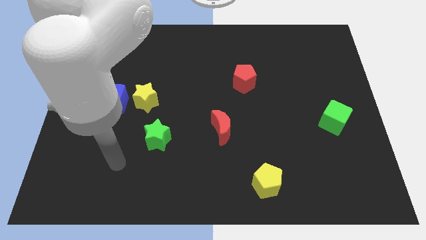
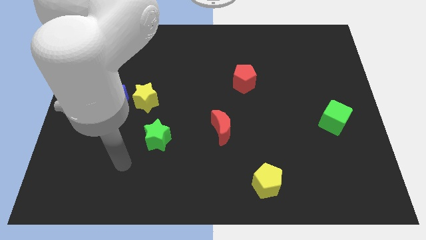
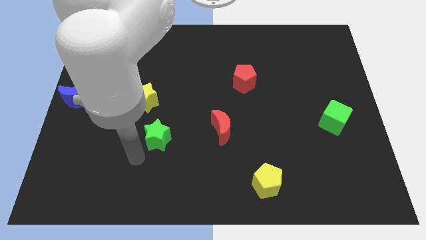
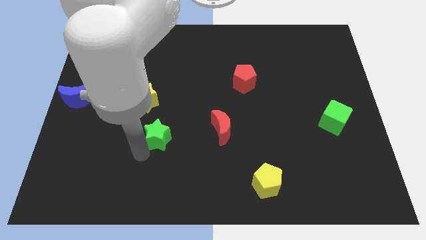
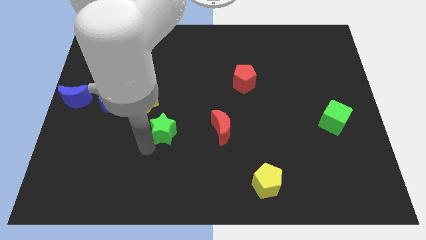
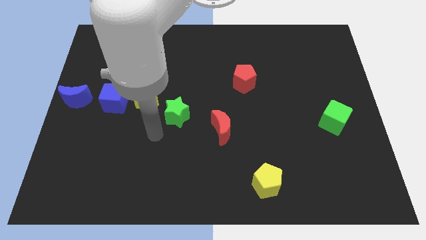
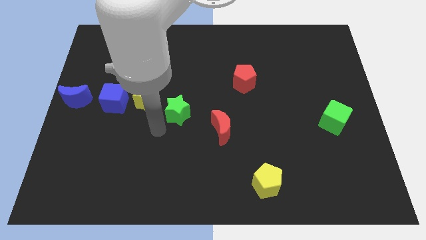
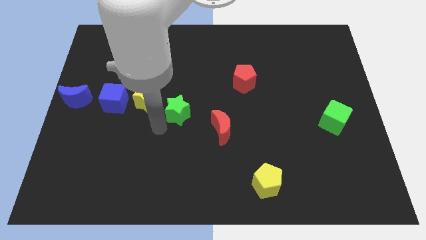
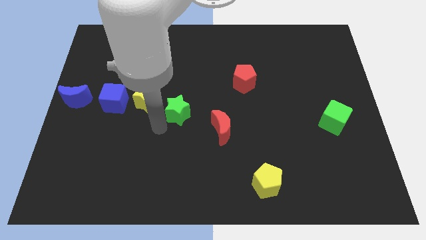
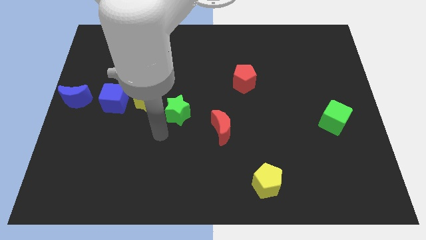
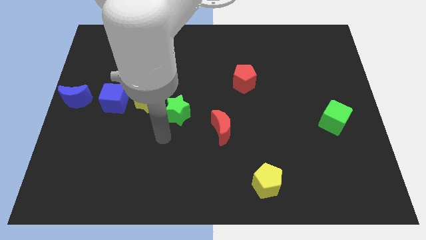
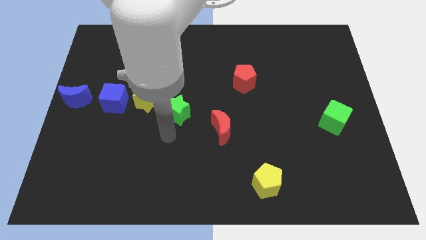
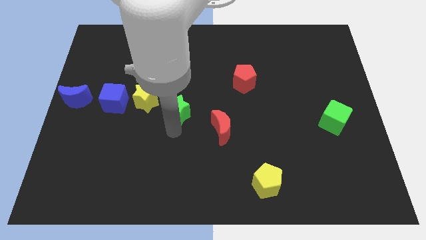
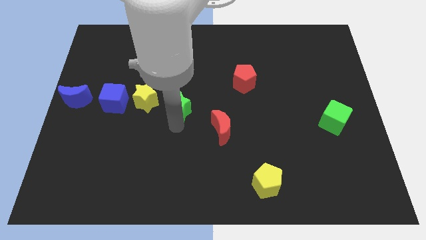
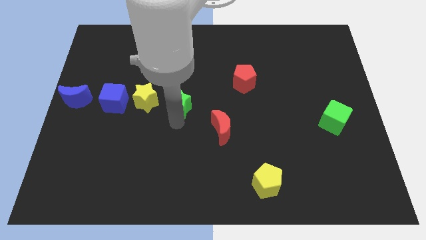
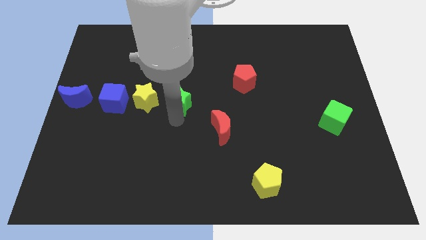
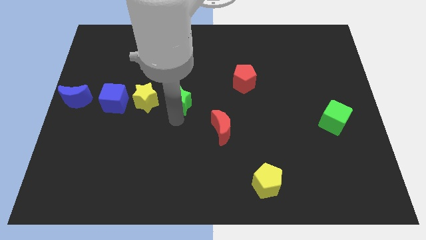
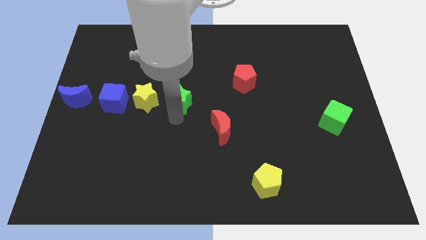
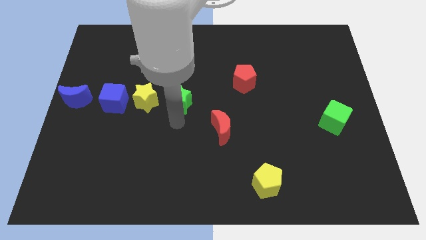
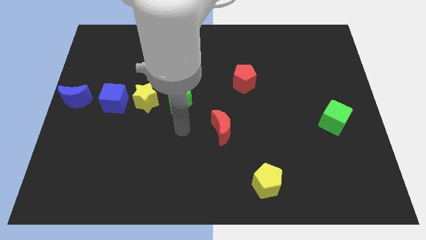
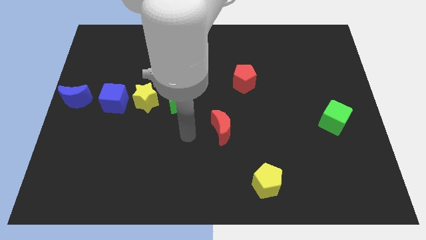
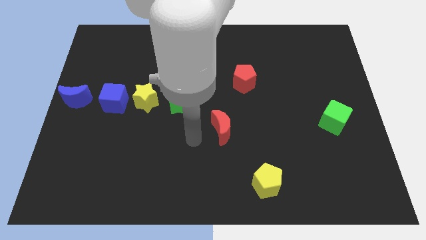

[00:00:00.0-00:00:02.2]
move the green star towards the left of the yellow star

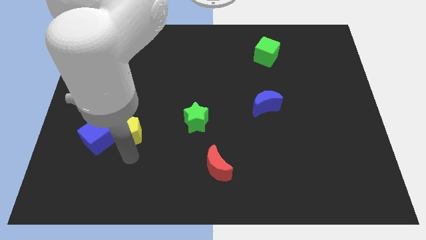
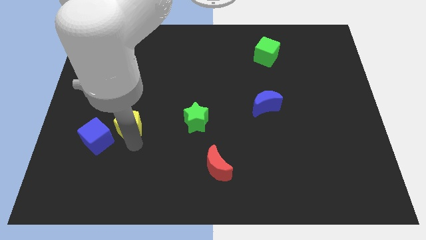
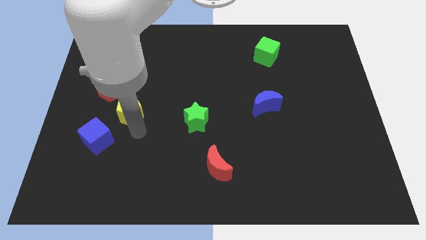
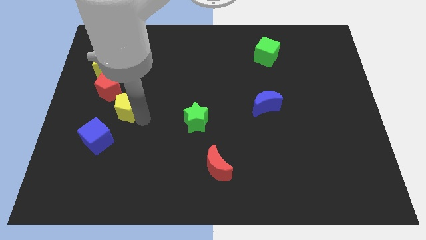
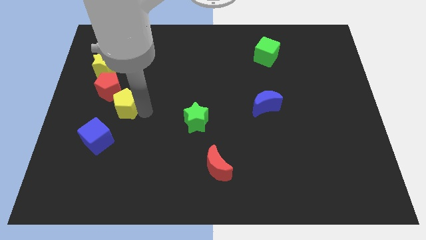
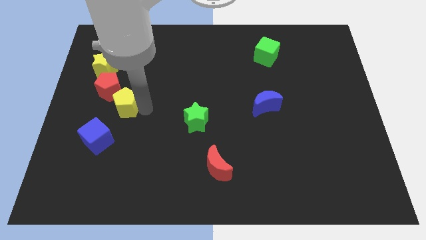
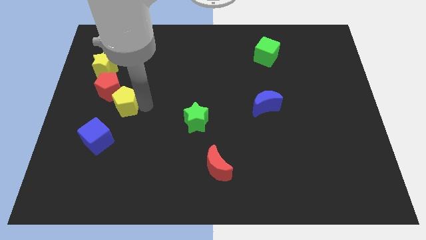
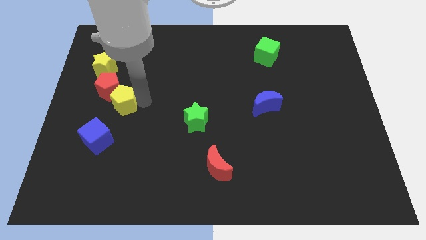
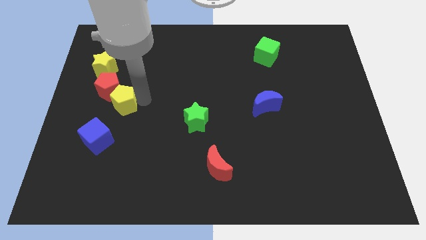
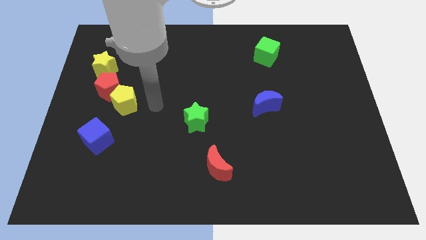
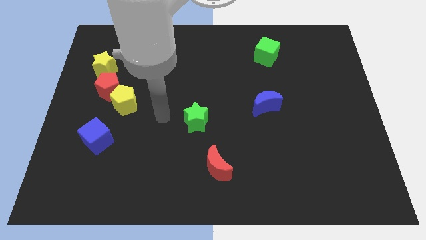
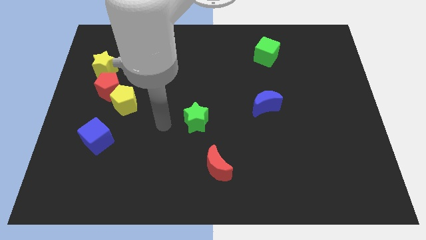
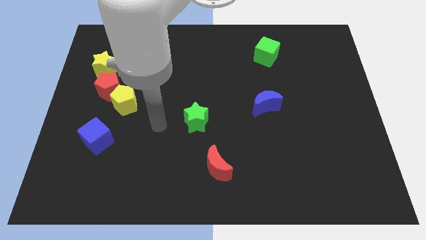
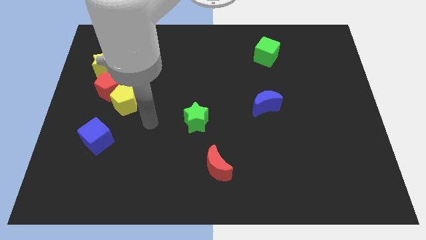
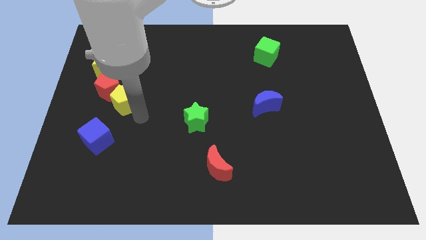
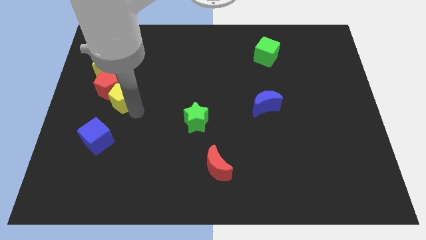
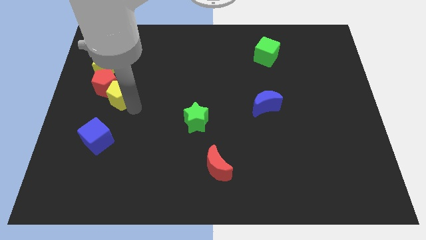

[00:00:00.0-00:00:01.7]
push yellow pentagon into red pentagon

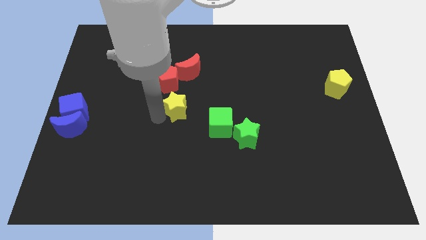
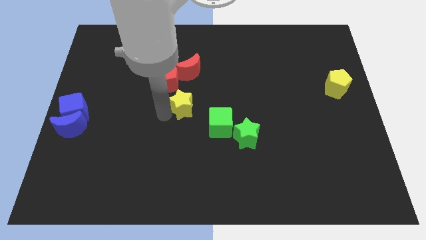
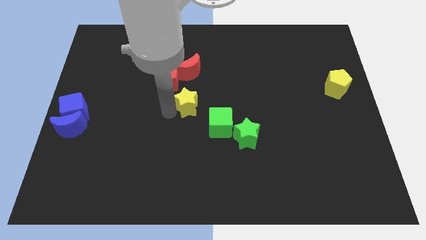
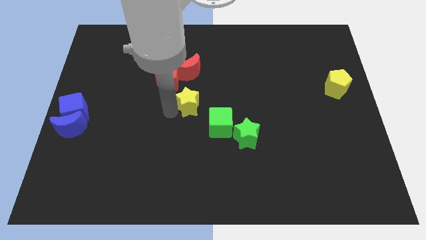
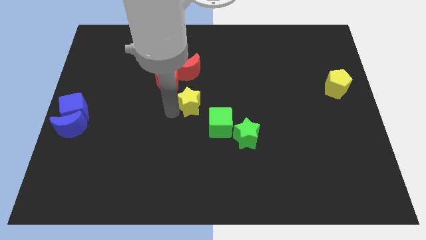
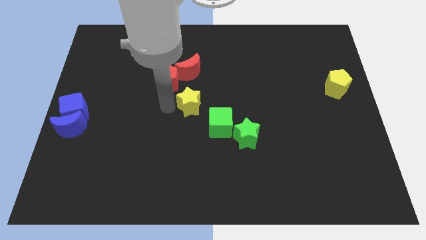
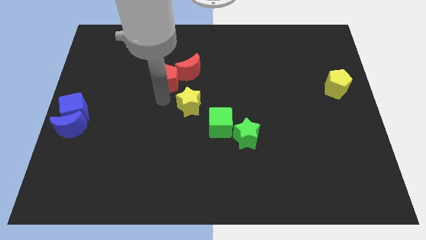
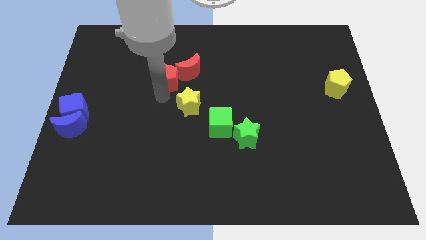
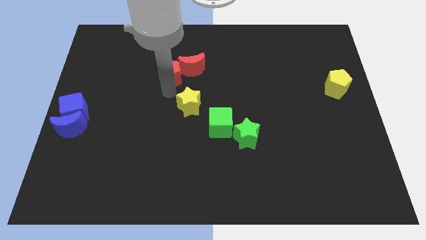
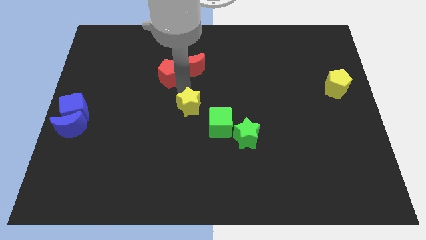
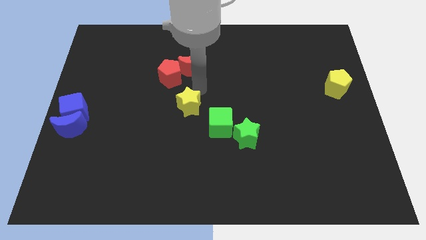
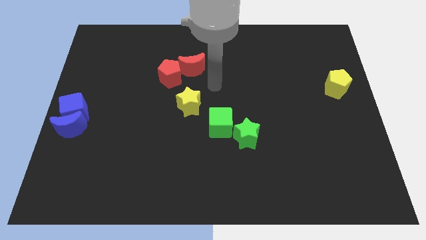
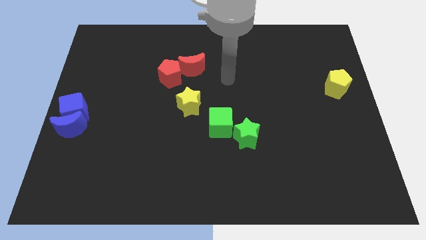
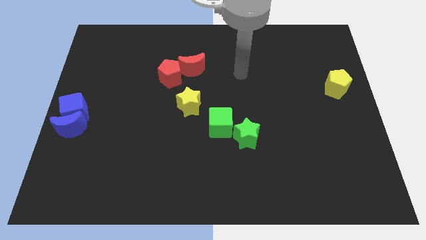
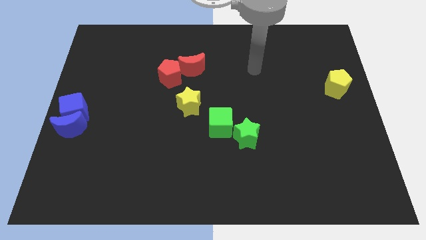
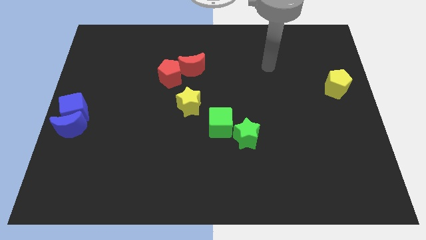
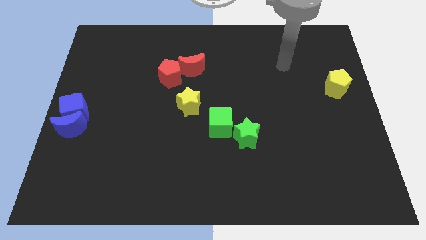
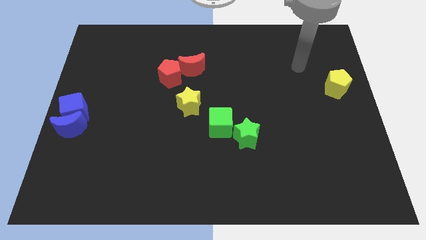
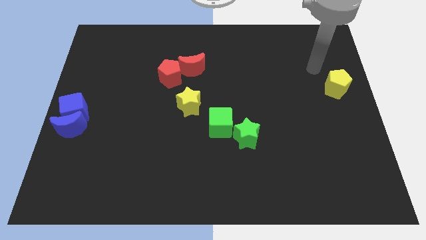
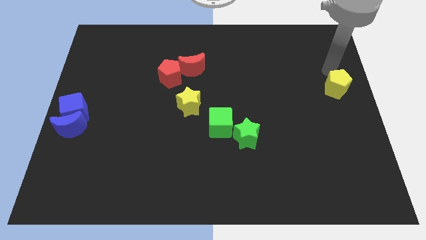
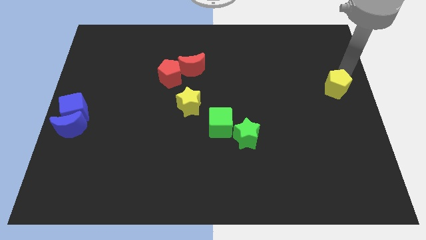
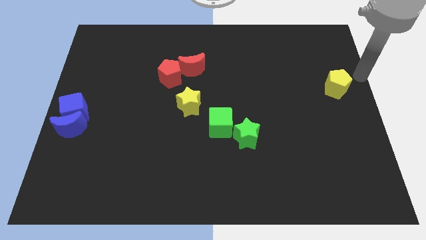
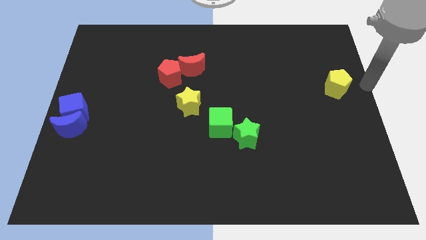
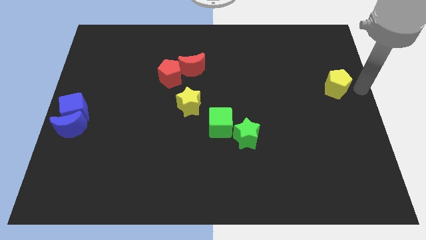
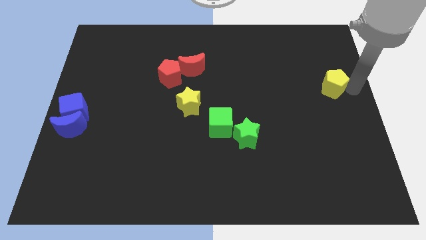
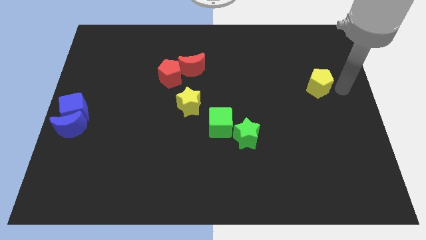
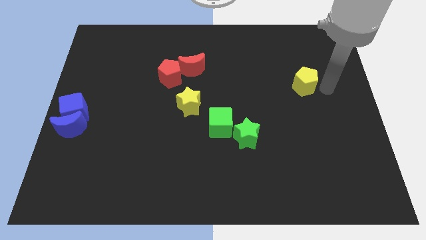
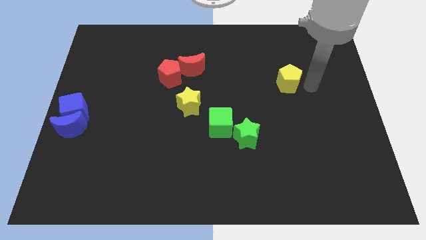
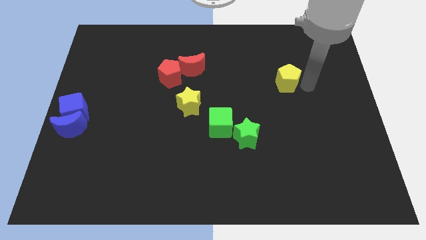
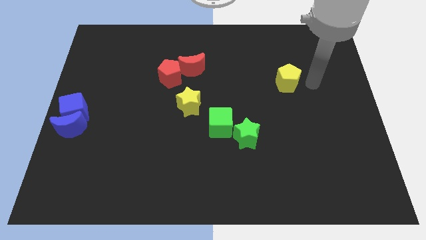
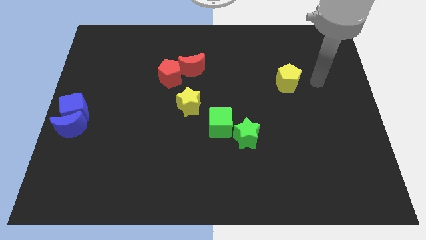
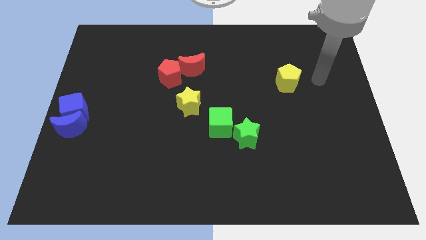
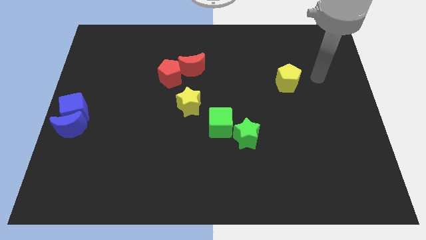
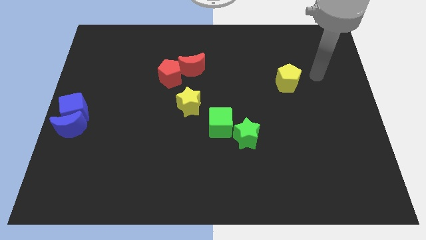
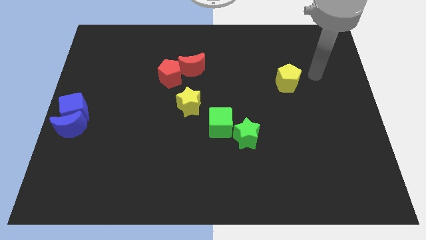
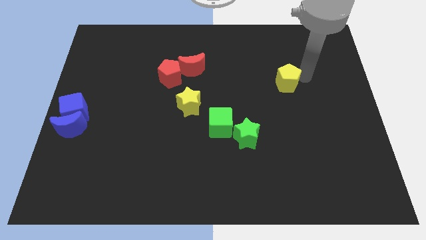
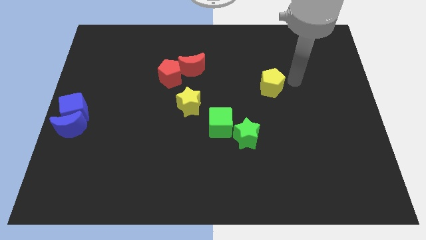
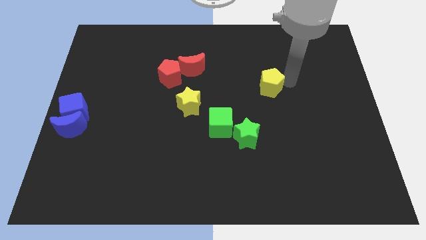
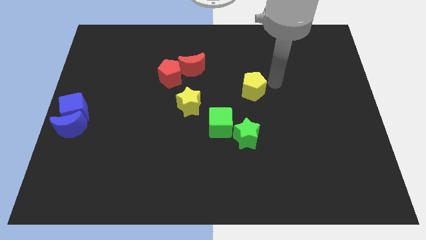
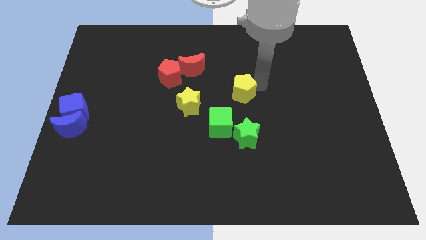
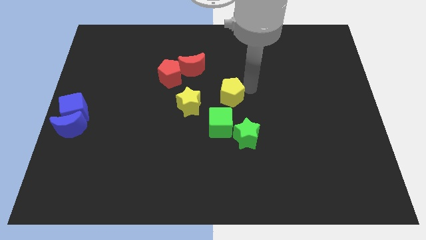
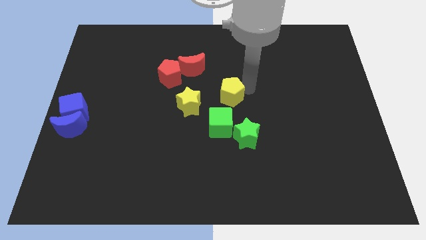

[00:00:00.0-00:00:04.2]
push the yellow pentagon towards the yellow star

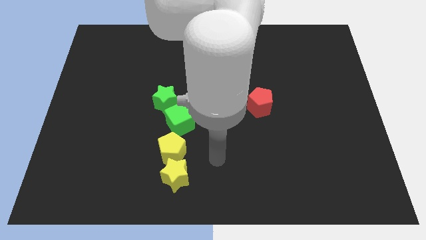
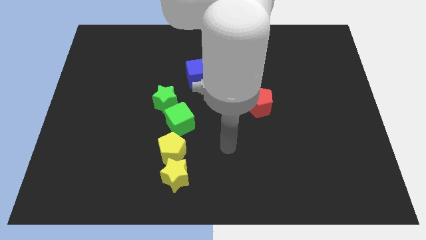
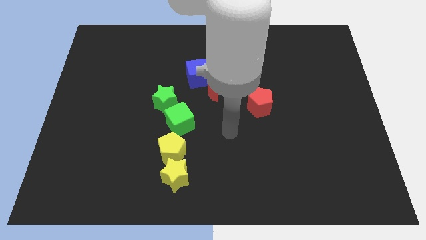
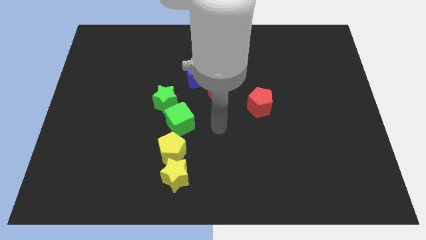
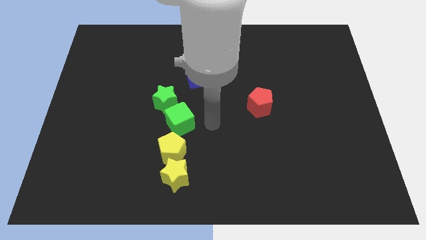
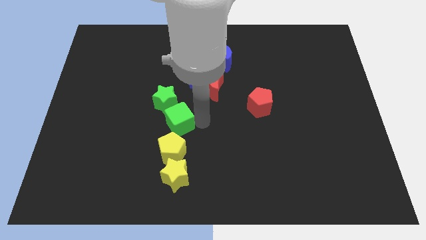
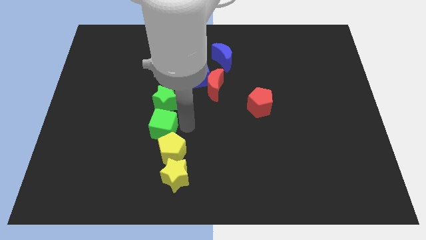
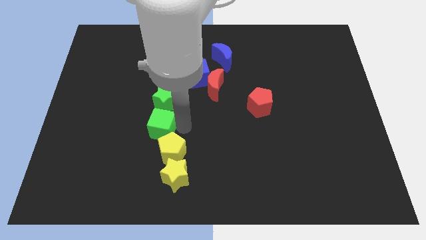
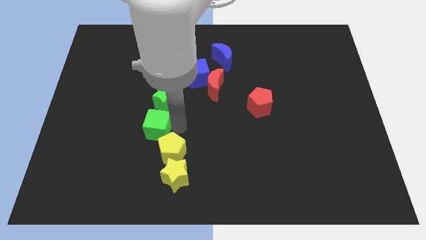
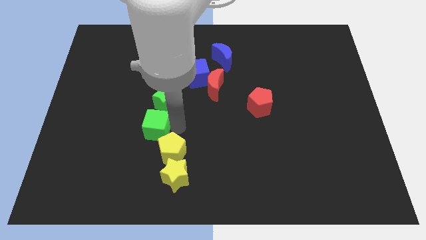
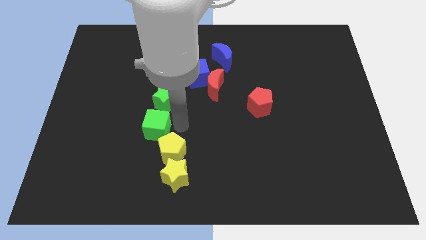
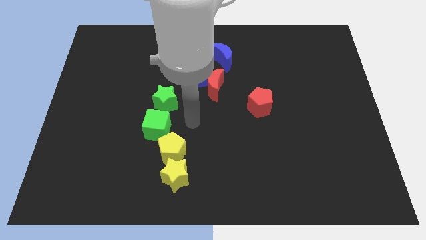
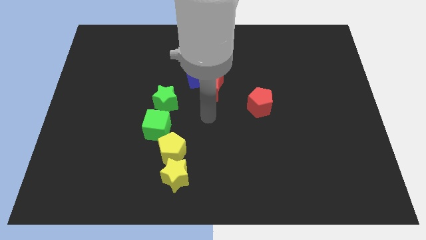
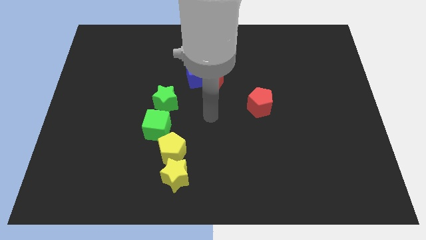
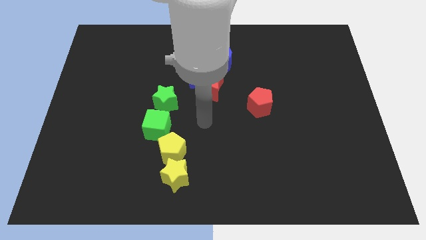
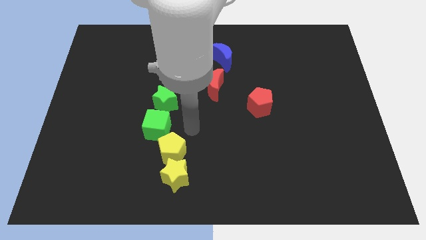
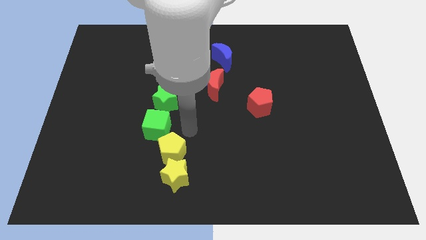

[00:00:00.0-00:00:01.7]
place green cube down to the green star
